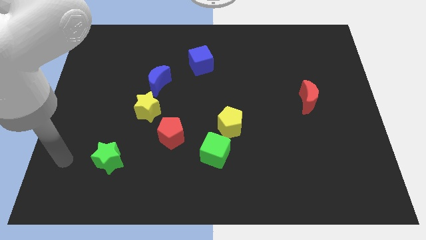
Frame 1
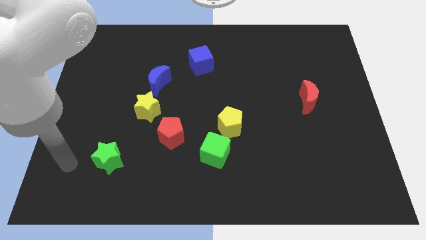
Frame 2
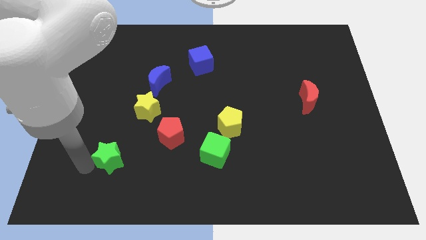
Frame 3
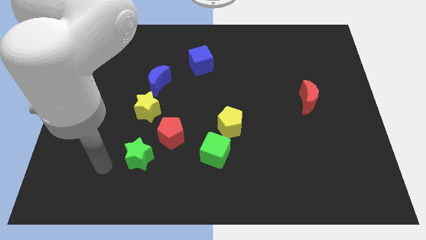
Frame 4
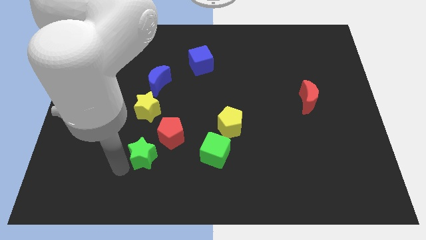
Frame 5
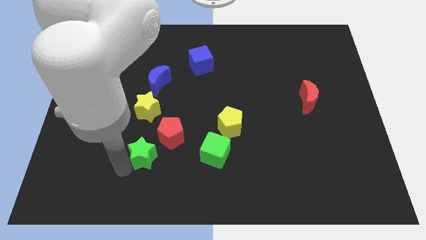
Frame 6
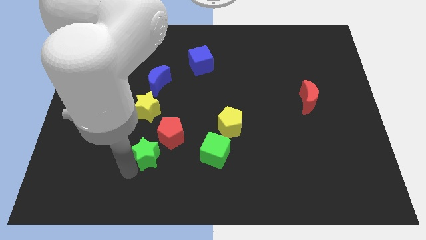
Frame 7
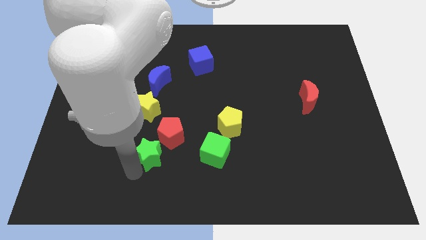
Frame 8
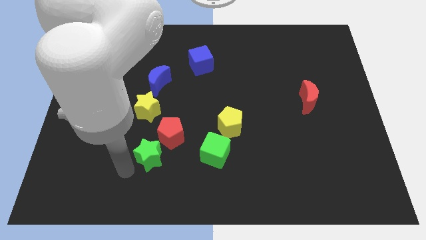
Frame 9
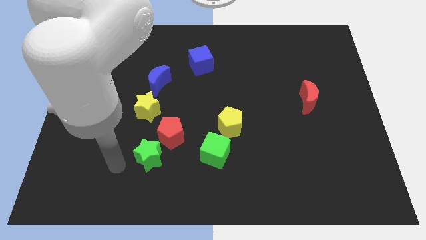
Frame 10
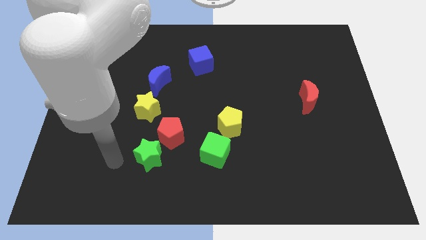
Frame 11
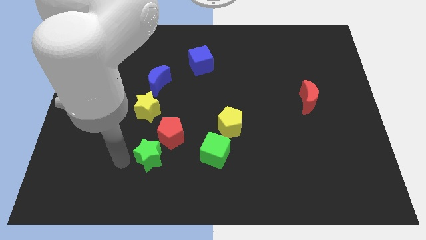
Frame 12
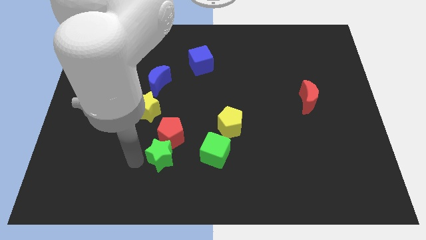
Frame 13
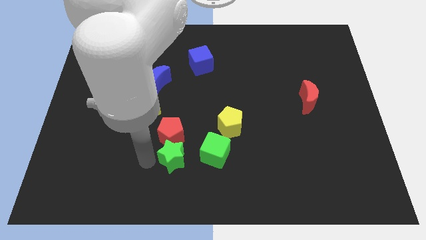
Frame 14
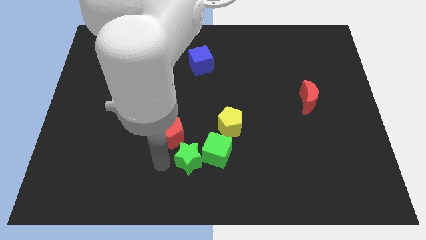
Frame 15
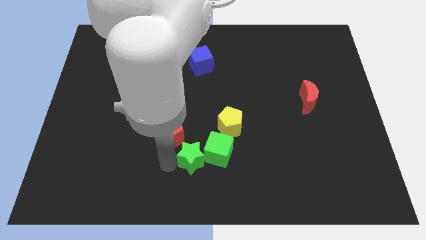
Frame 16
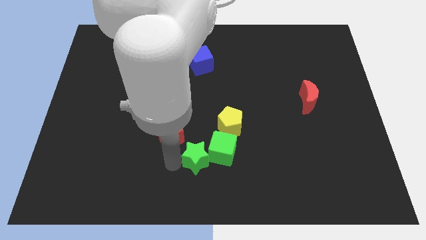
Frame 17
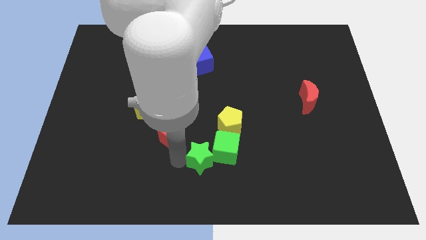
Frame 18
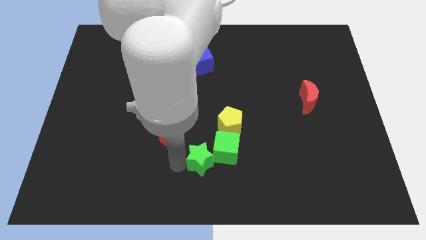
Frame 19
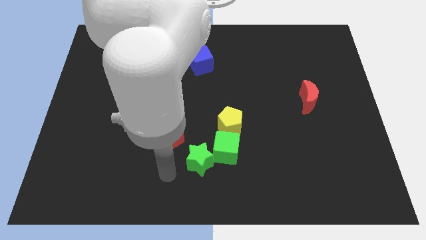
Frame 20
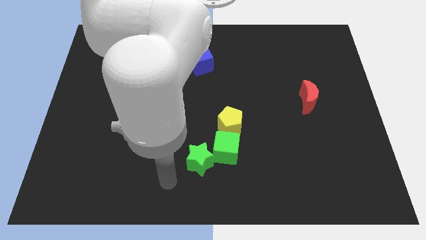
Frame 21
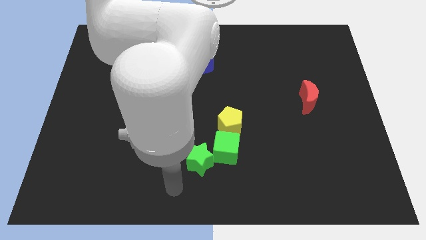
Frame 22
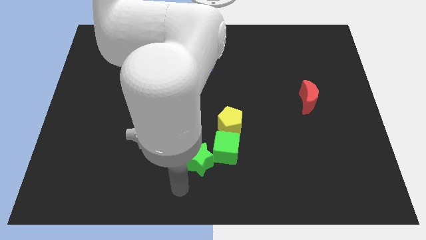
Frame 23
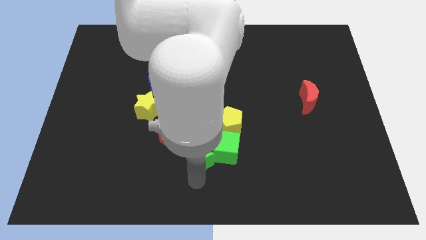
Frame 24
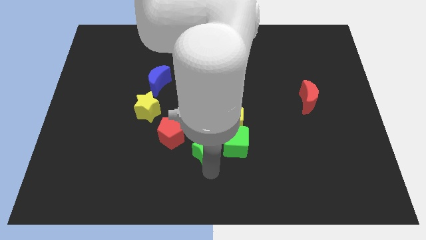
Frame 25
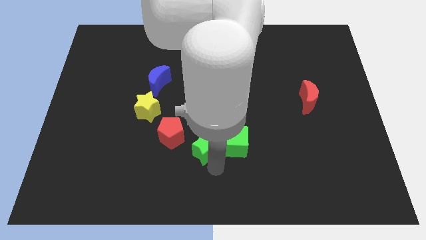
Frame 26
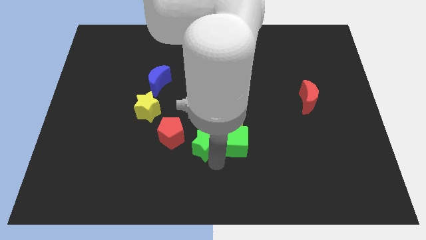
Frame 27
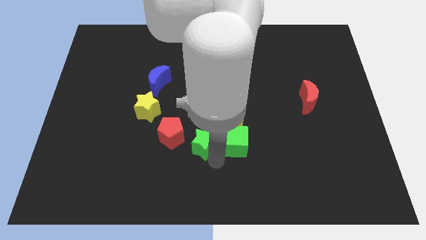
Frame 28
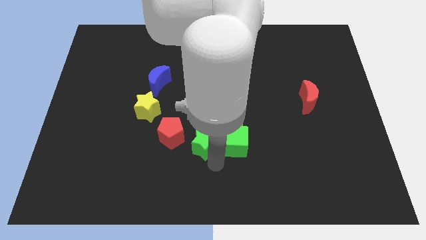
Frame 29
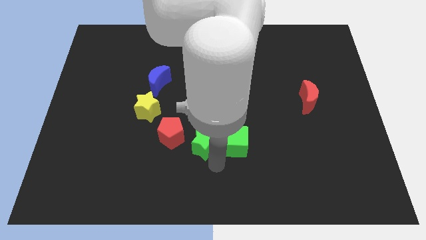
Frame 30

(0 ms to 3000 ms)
place the green star left to the green cube

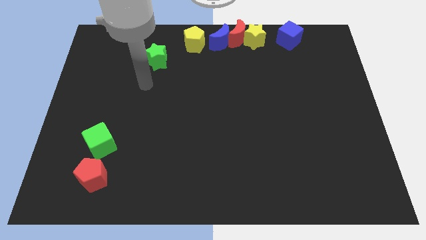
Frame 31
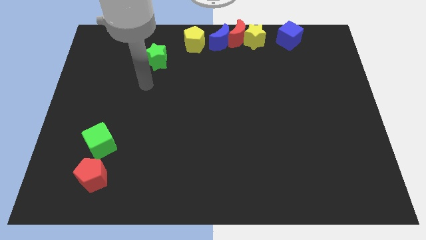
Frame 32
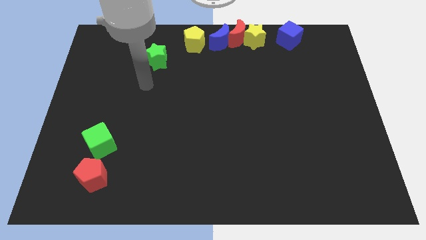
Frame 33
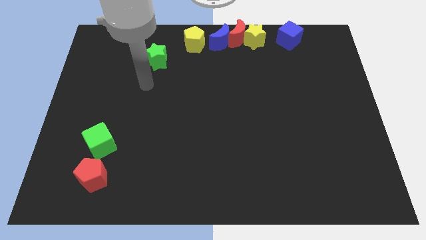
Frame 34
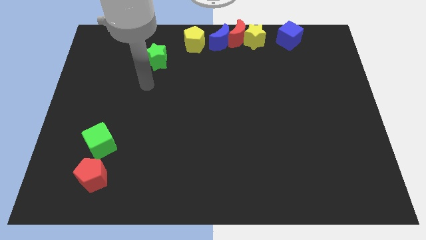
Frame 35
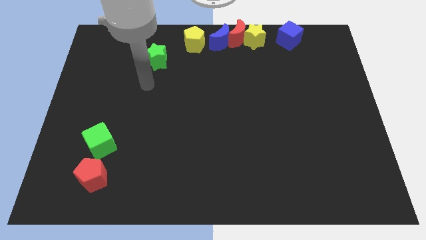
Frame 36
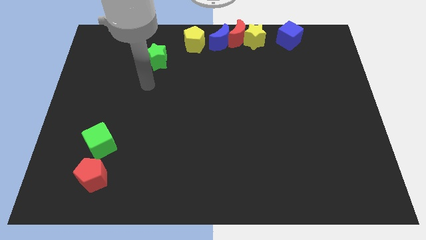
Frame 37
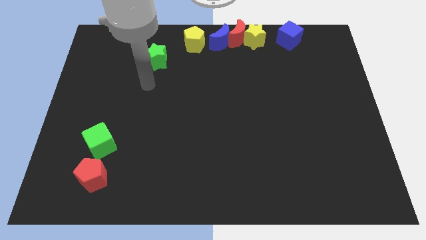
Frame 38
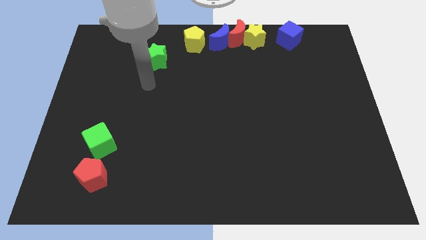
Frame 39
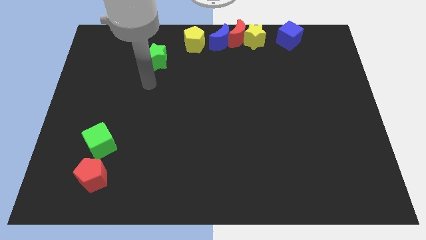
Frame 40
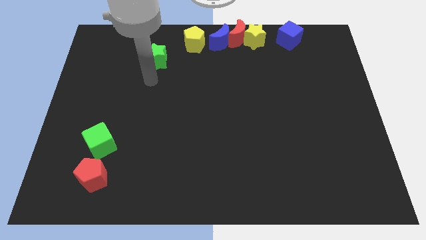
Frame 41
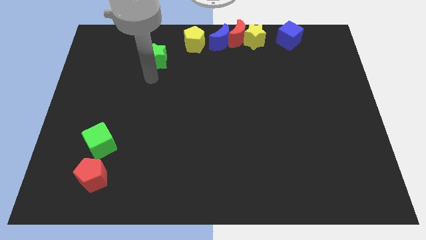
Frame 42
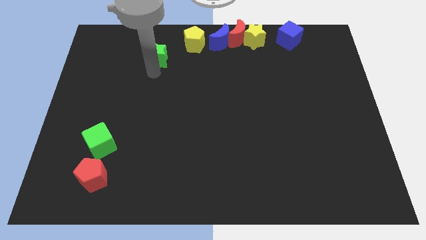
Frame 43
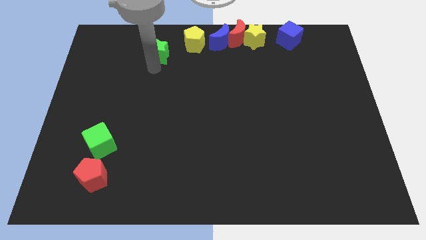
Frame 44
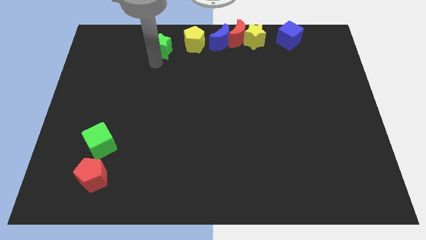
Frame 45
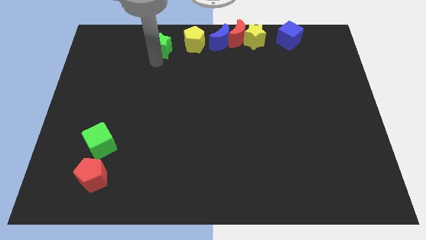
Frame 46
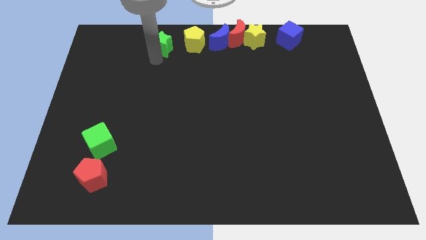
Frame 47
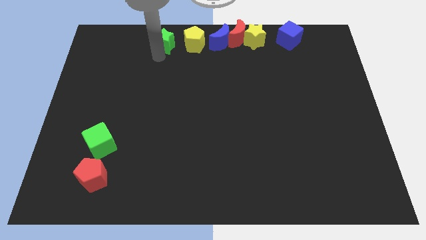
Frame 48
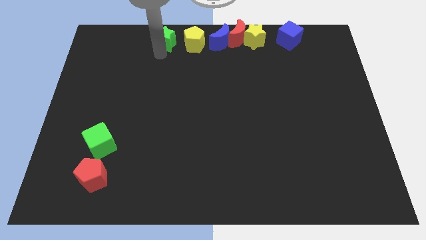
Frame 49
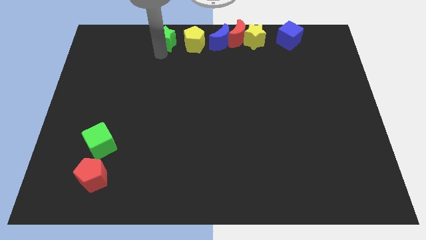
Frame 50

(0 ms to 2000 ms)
place the green star close to the yellow pentagon

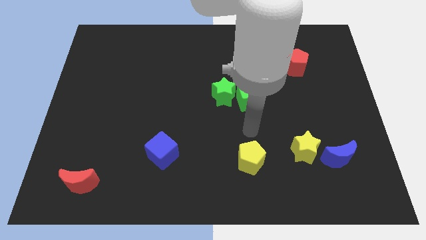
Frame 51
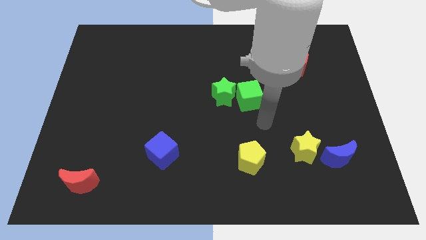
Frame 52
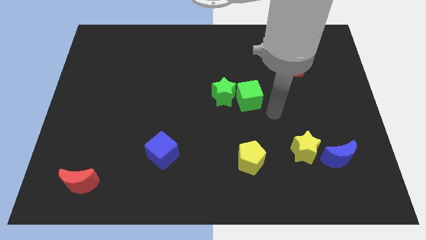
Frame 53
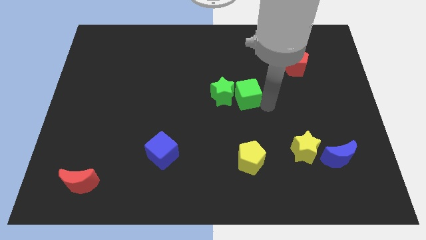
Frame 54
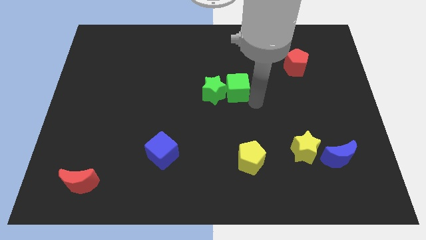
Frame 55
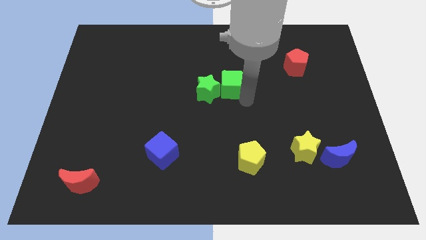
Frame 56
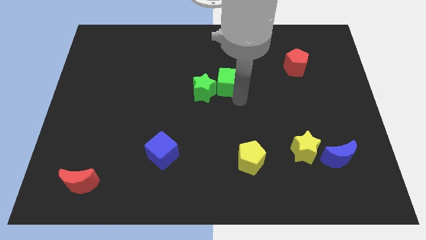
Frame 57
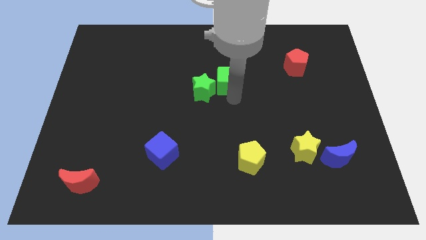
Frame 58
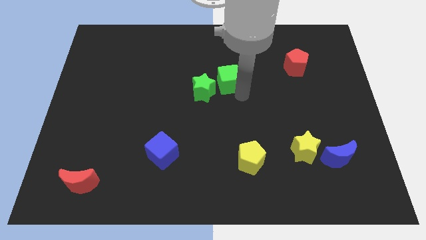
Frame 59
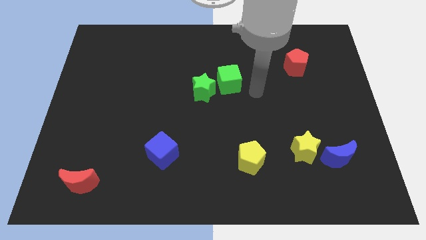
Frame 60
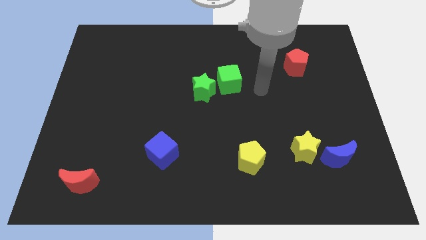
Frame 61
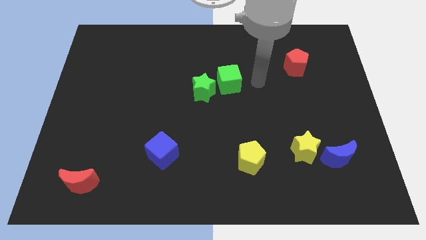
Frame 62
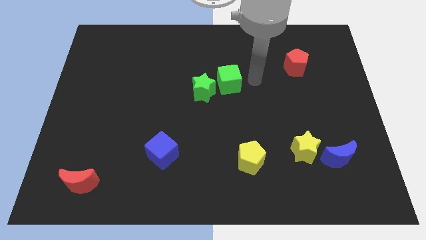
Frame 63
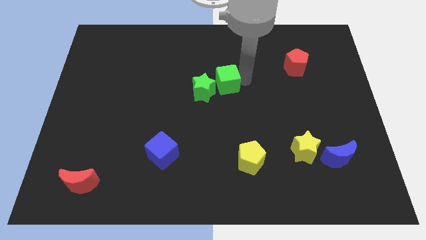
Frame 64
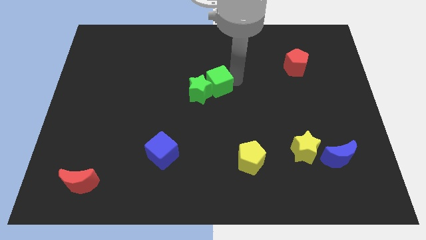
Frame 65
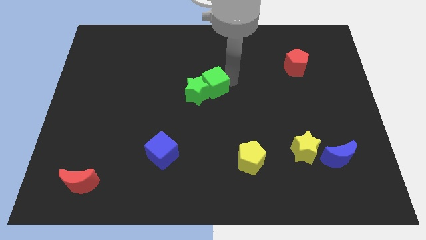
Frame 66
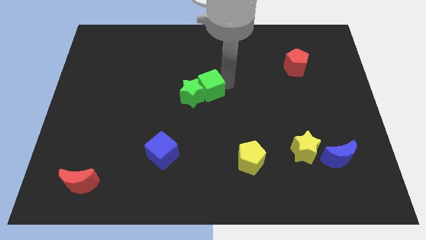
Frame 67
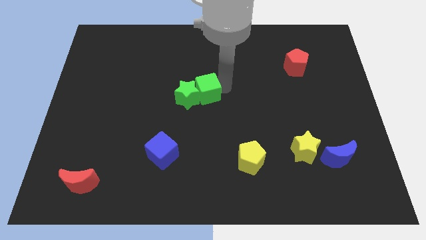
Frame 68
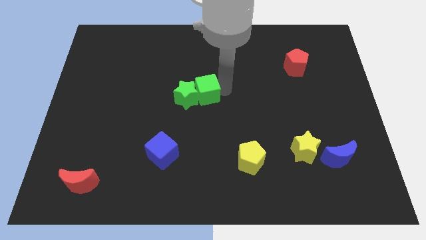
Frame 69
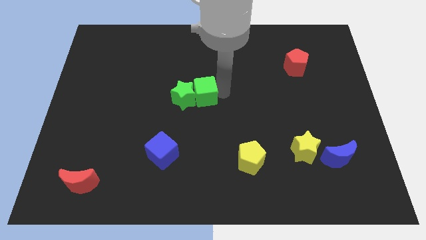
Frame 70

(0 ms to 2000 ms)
push the green blocks towards the left side

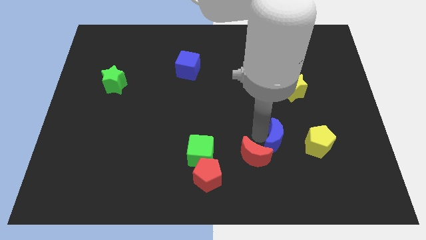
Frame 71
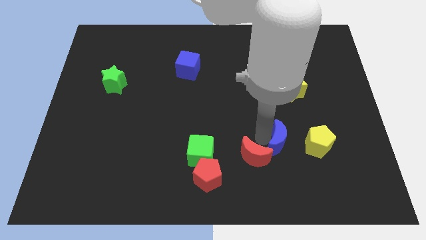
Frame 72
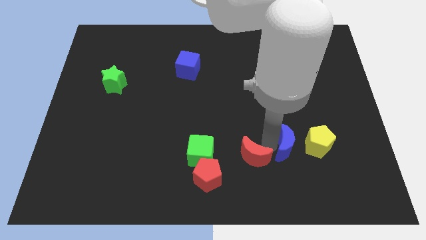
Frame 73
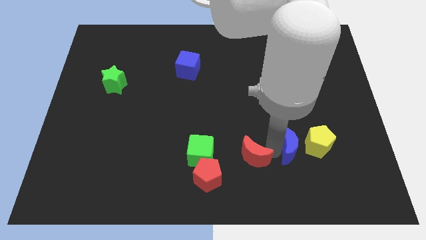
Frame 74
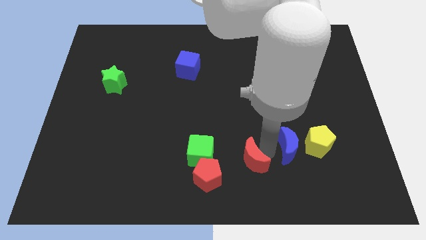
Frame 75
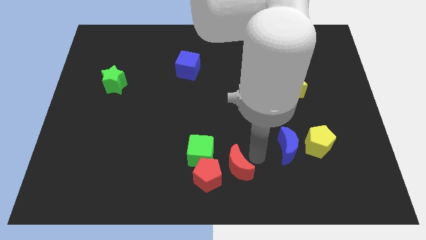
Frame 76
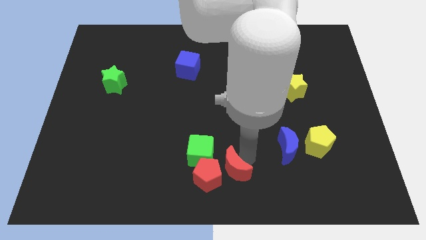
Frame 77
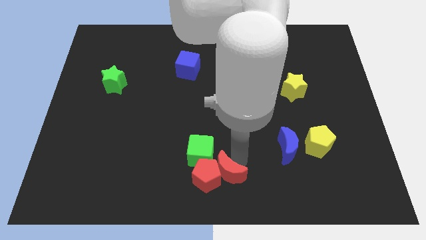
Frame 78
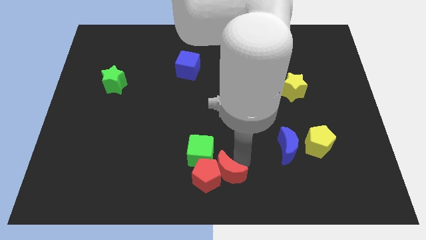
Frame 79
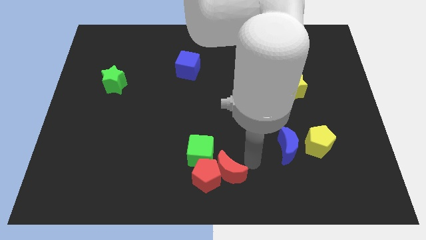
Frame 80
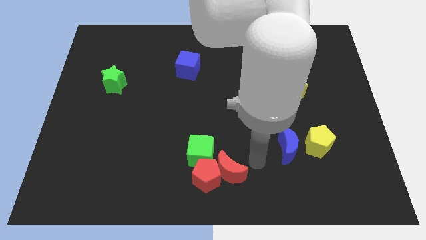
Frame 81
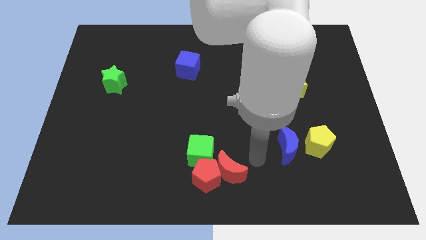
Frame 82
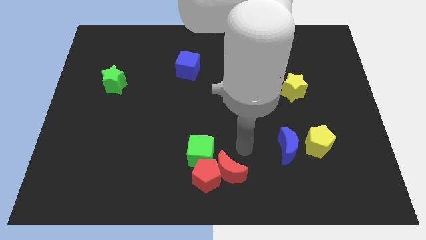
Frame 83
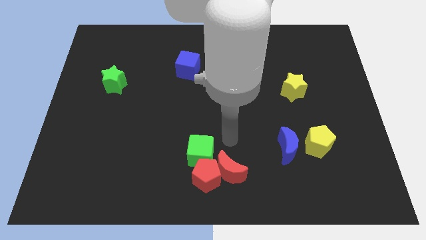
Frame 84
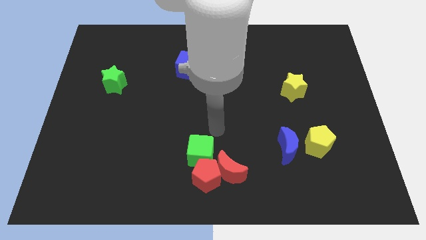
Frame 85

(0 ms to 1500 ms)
put red blocks together

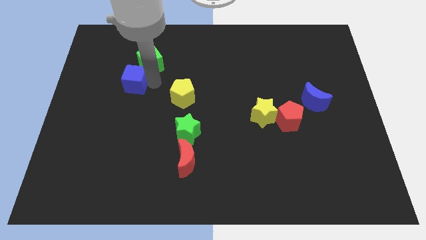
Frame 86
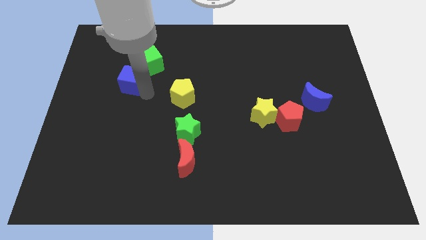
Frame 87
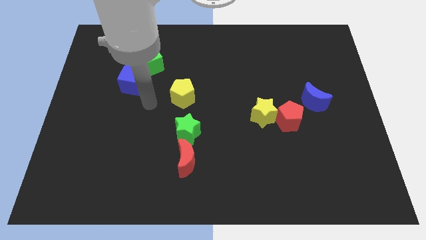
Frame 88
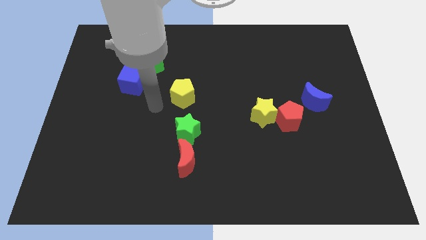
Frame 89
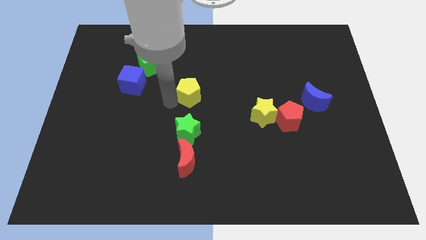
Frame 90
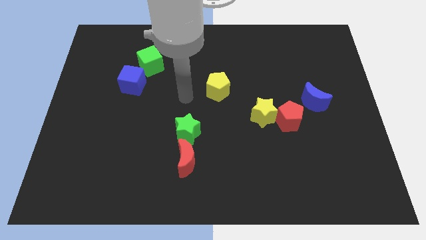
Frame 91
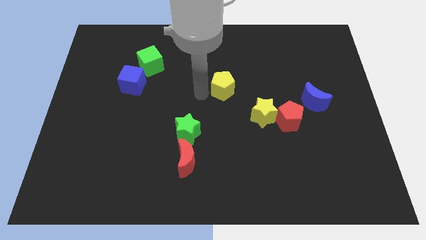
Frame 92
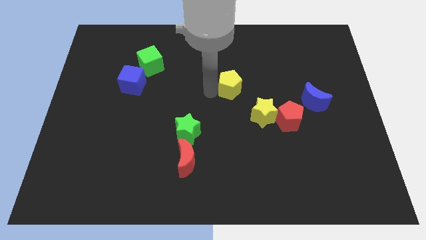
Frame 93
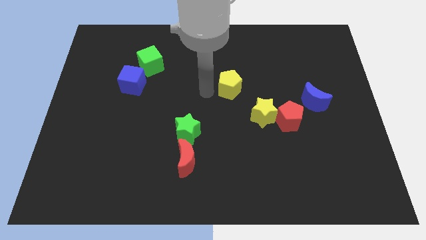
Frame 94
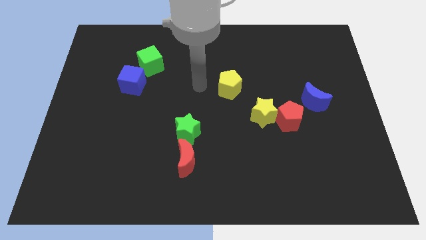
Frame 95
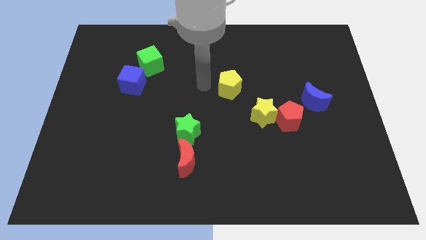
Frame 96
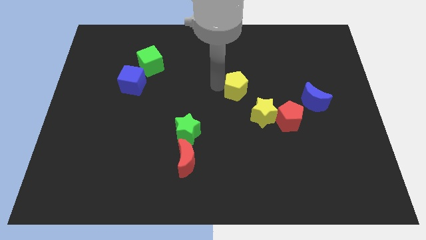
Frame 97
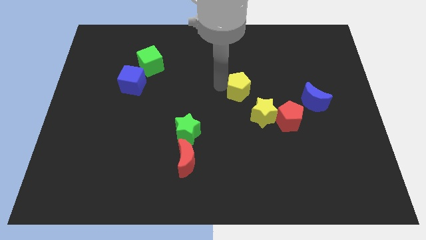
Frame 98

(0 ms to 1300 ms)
drag yellow pentagon towards middle of the board
